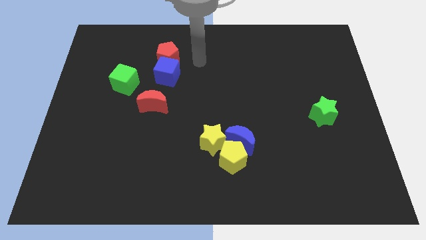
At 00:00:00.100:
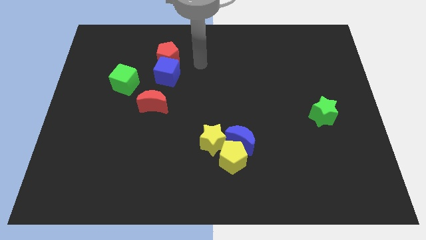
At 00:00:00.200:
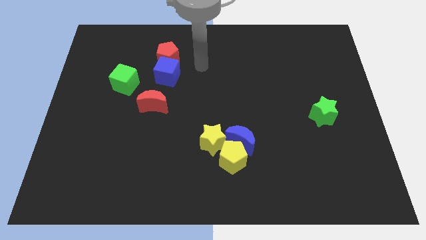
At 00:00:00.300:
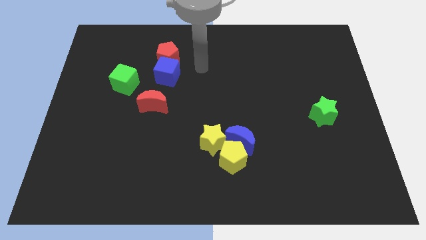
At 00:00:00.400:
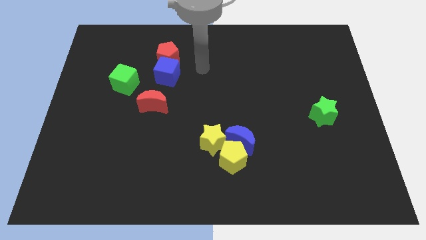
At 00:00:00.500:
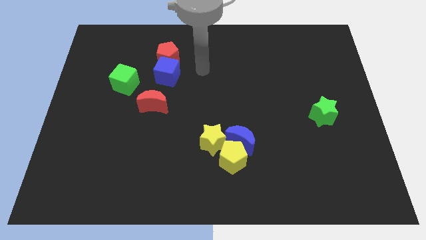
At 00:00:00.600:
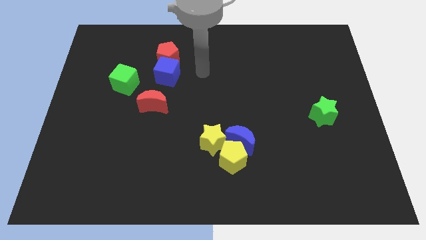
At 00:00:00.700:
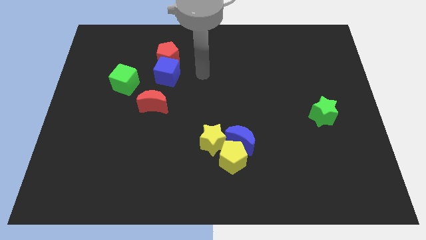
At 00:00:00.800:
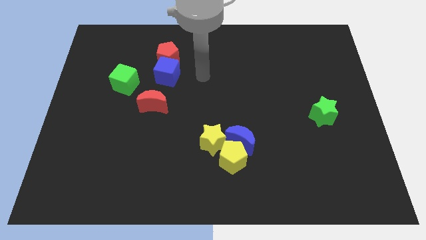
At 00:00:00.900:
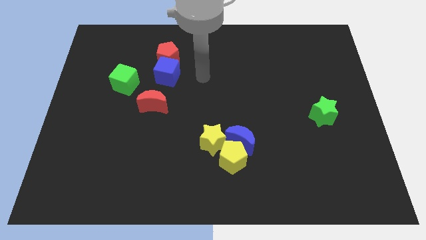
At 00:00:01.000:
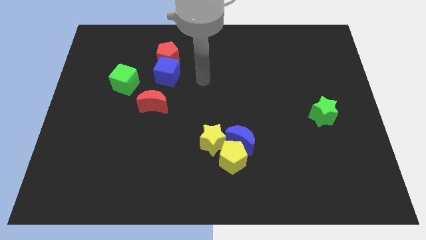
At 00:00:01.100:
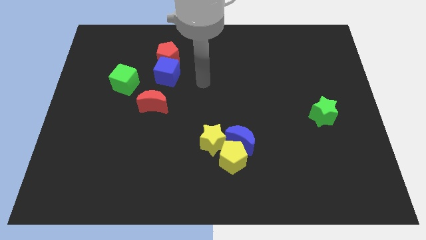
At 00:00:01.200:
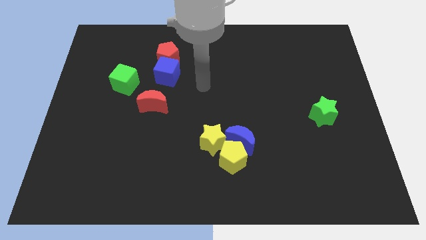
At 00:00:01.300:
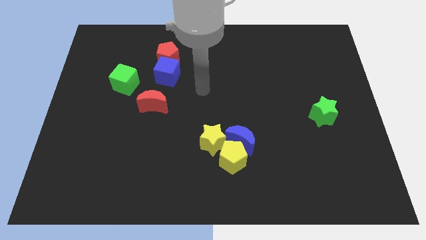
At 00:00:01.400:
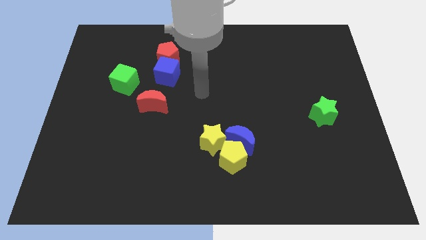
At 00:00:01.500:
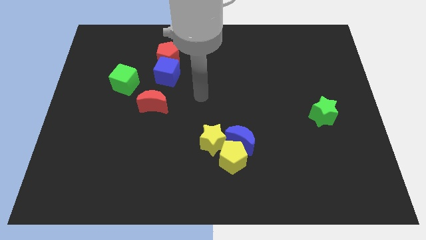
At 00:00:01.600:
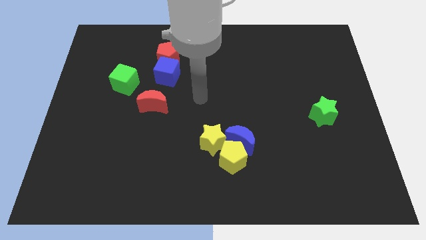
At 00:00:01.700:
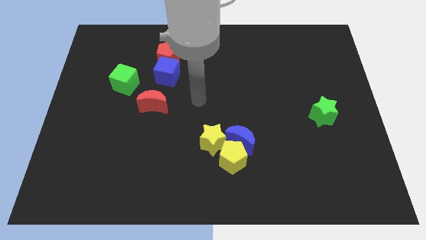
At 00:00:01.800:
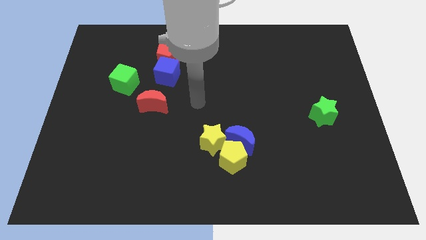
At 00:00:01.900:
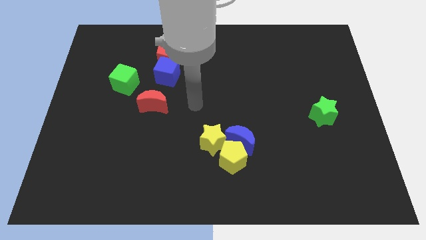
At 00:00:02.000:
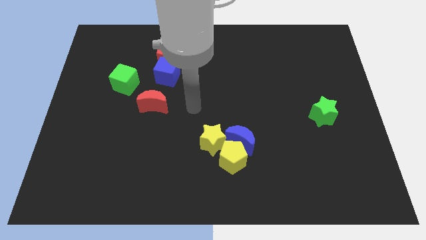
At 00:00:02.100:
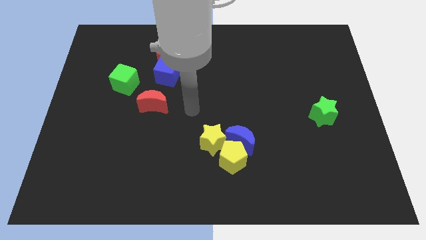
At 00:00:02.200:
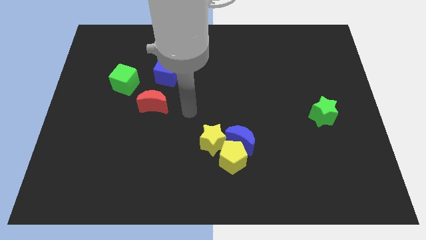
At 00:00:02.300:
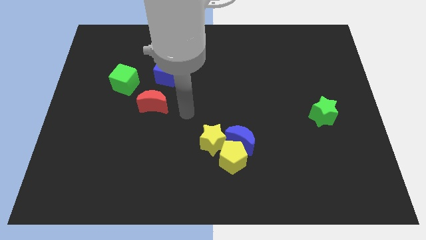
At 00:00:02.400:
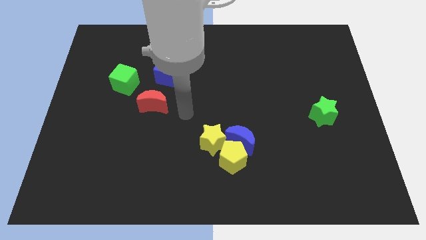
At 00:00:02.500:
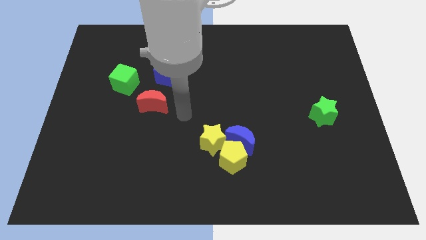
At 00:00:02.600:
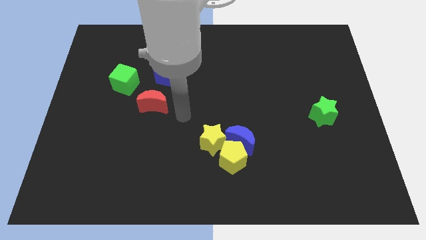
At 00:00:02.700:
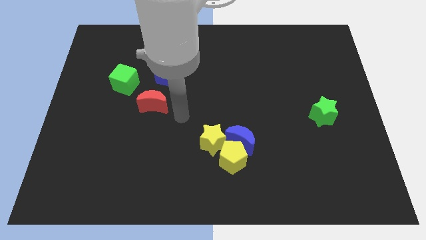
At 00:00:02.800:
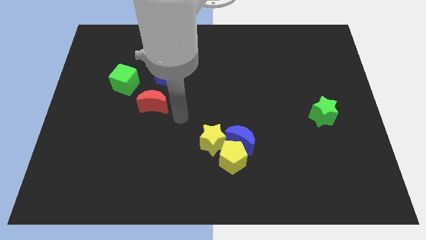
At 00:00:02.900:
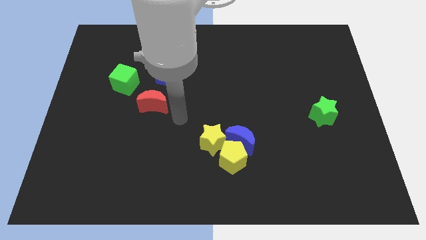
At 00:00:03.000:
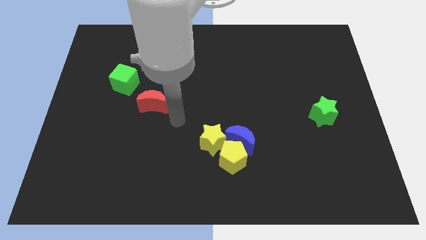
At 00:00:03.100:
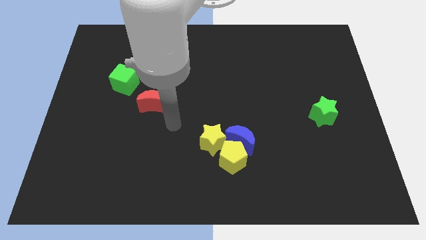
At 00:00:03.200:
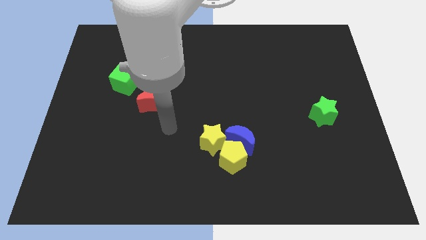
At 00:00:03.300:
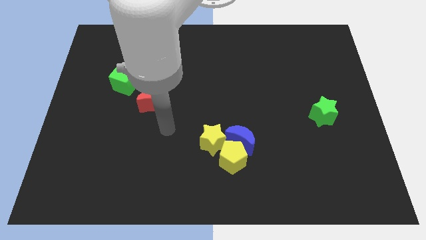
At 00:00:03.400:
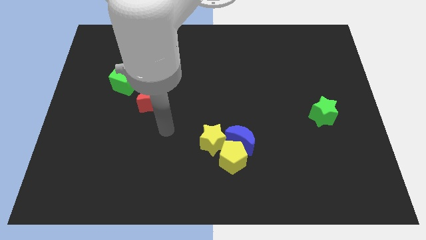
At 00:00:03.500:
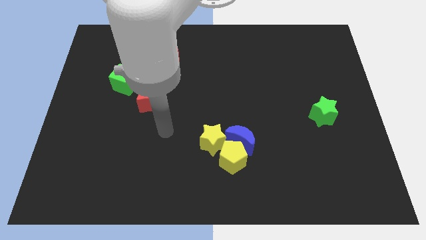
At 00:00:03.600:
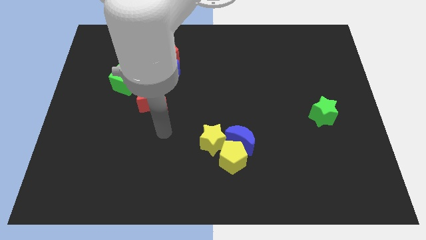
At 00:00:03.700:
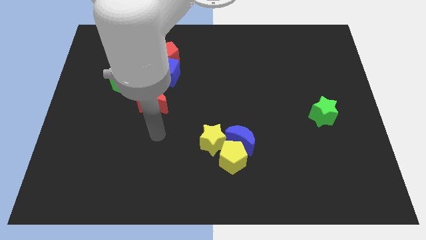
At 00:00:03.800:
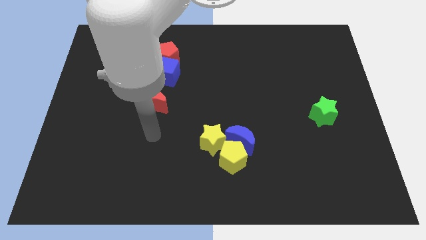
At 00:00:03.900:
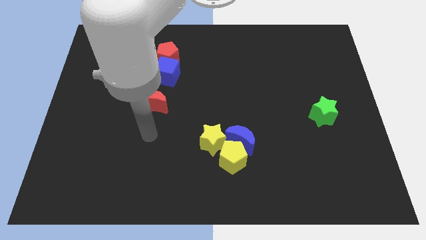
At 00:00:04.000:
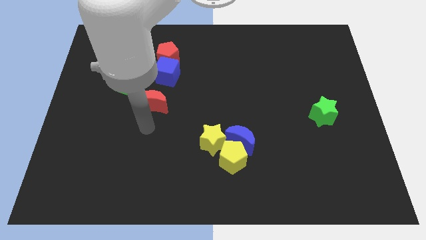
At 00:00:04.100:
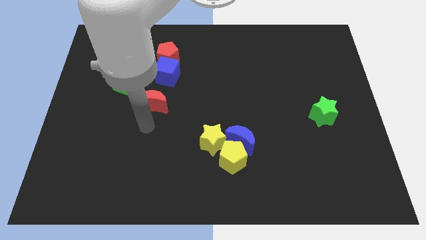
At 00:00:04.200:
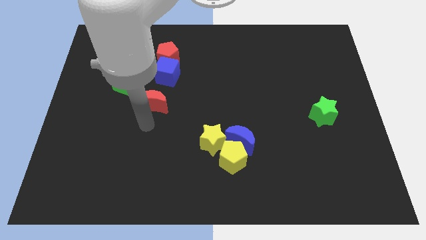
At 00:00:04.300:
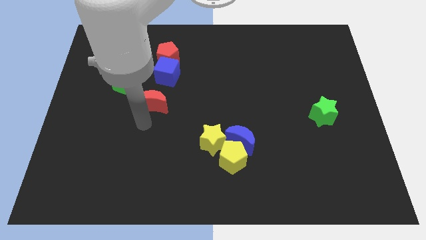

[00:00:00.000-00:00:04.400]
move your hand to the bottom side of the red crescent

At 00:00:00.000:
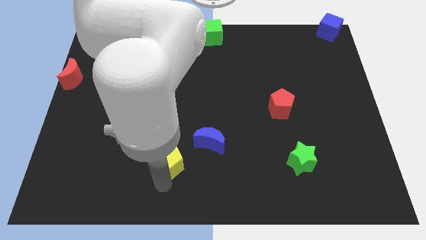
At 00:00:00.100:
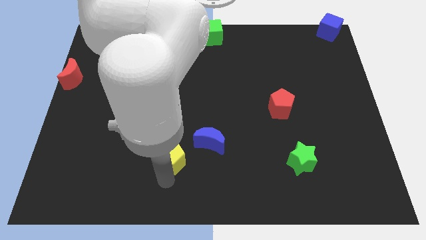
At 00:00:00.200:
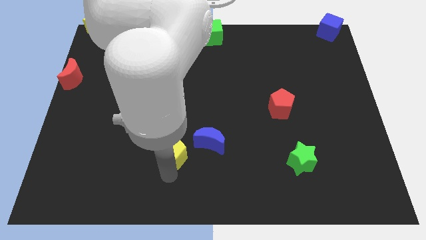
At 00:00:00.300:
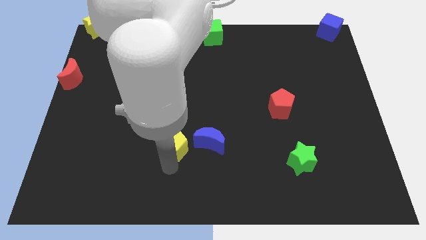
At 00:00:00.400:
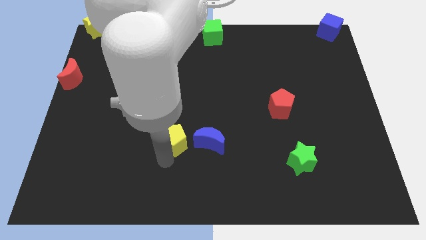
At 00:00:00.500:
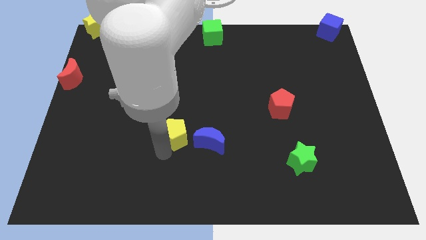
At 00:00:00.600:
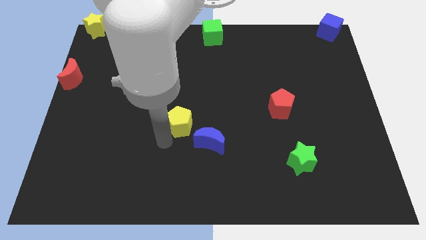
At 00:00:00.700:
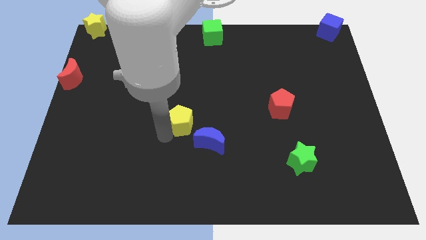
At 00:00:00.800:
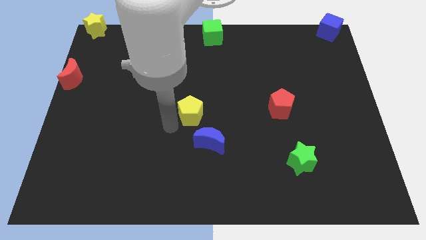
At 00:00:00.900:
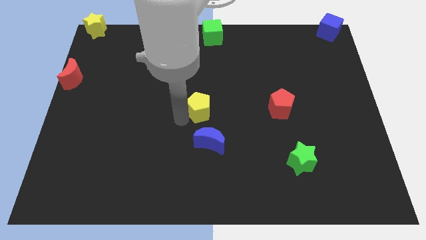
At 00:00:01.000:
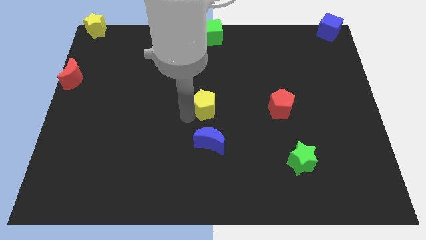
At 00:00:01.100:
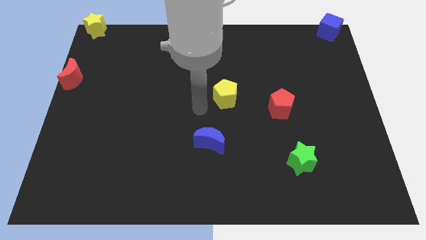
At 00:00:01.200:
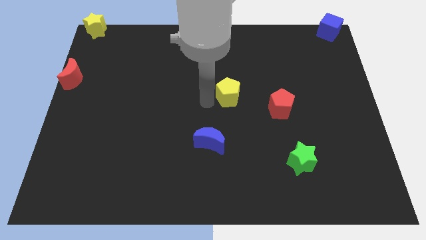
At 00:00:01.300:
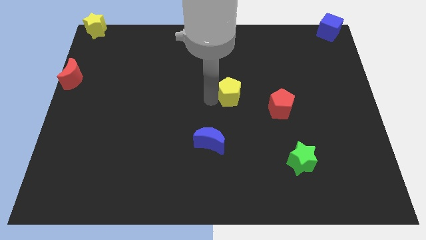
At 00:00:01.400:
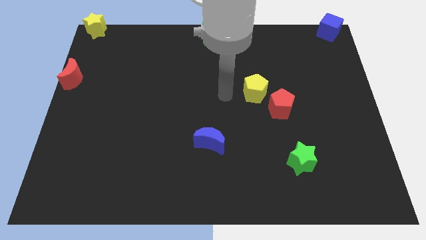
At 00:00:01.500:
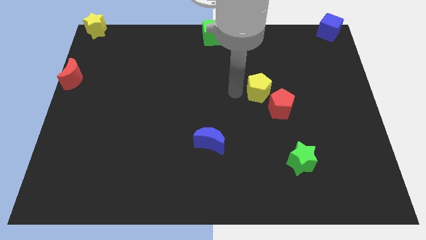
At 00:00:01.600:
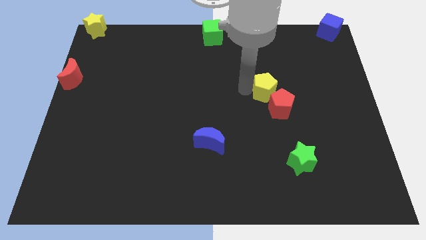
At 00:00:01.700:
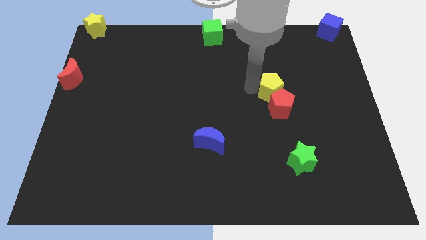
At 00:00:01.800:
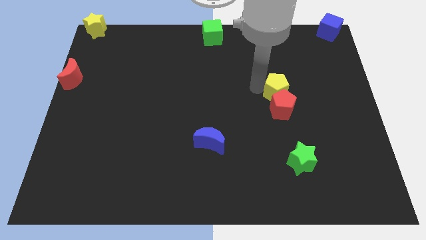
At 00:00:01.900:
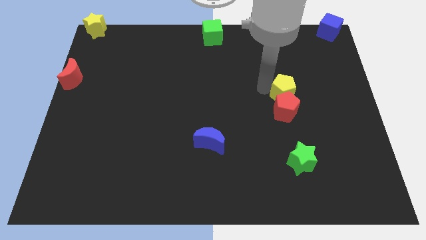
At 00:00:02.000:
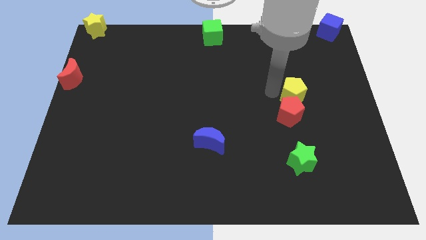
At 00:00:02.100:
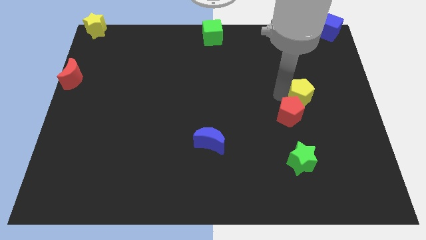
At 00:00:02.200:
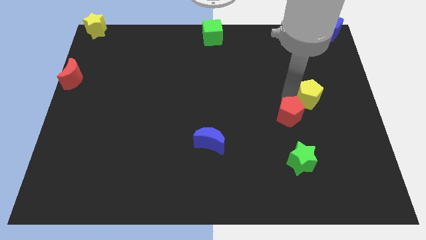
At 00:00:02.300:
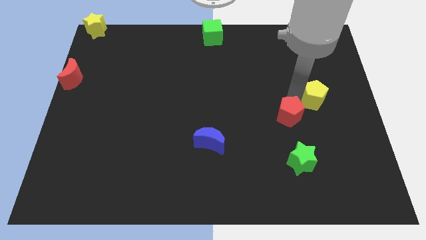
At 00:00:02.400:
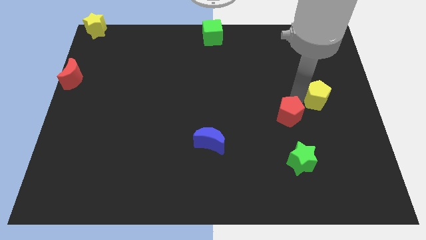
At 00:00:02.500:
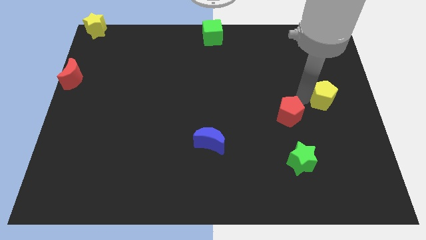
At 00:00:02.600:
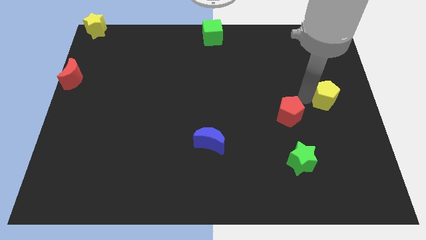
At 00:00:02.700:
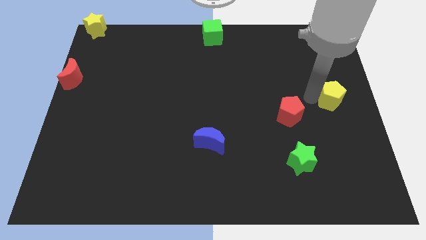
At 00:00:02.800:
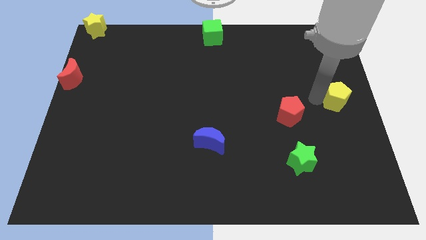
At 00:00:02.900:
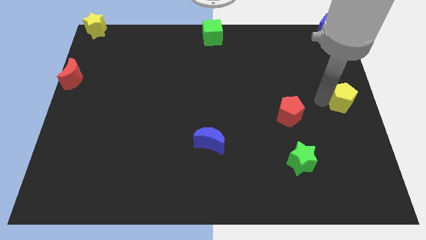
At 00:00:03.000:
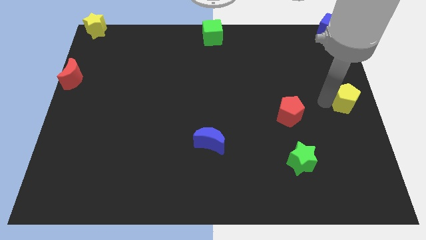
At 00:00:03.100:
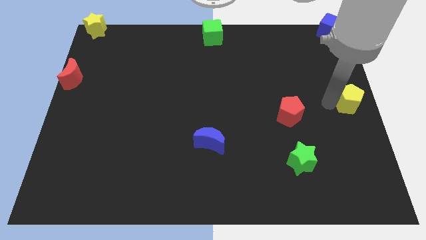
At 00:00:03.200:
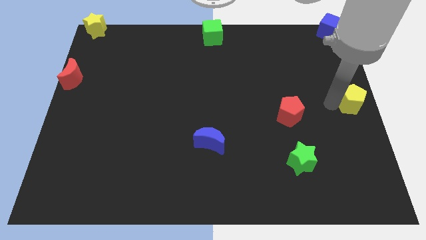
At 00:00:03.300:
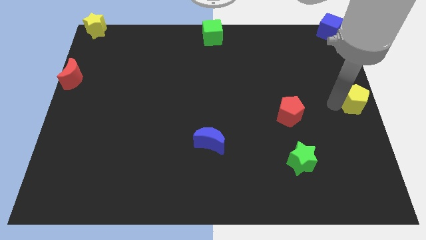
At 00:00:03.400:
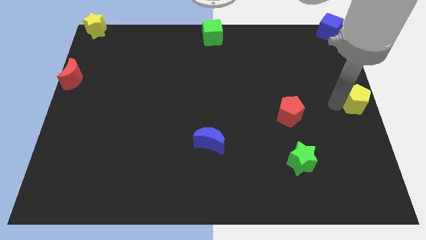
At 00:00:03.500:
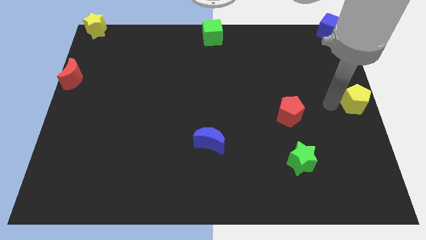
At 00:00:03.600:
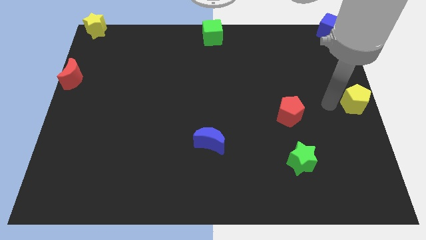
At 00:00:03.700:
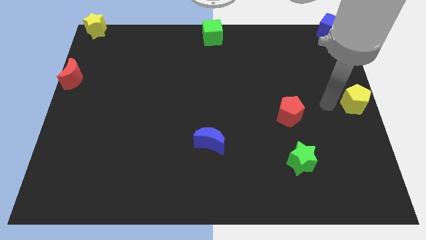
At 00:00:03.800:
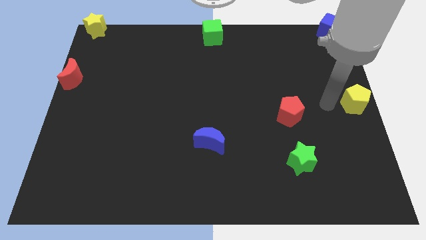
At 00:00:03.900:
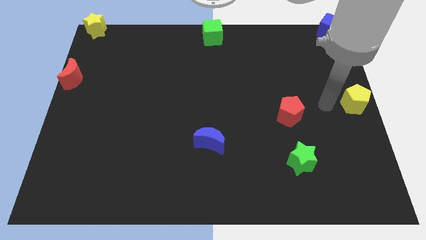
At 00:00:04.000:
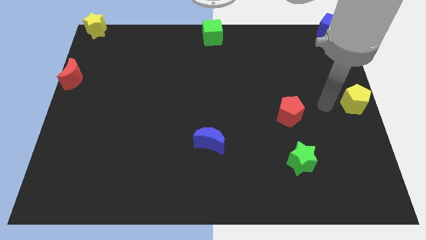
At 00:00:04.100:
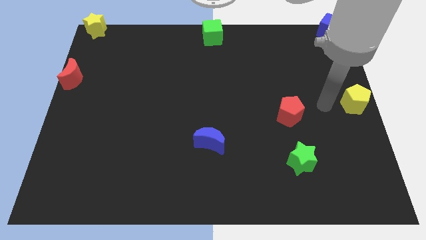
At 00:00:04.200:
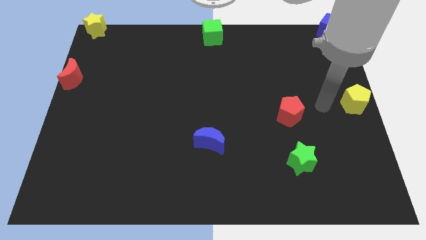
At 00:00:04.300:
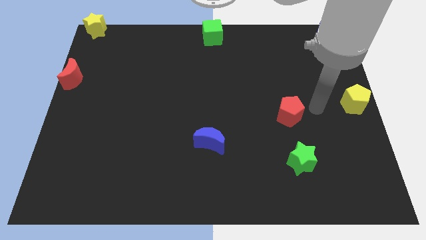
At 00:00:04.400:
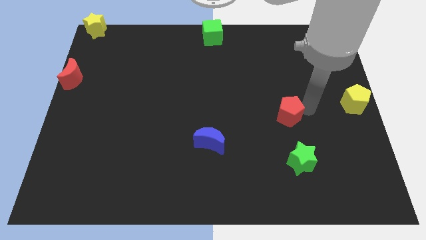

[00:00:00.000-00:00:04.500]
move yellow pentagon to the center right side of the board
